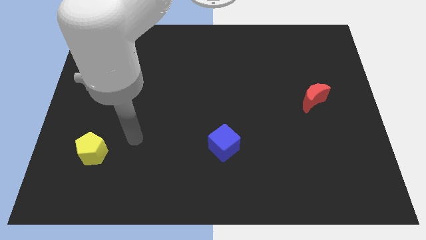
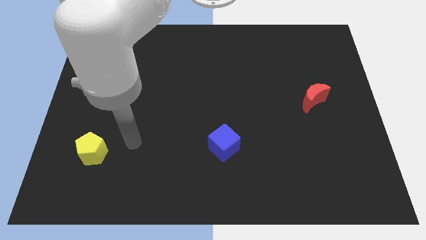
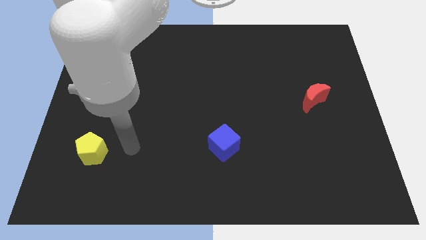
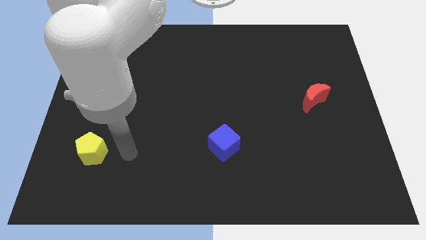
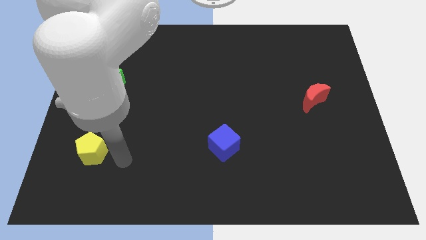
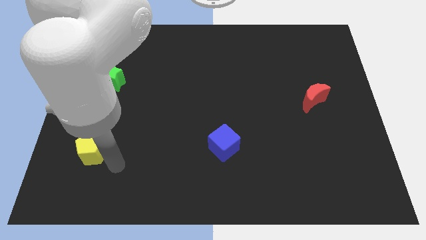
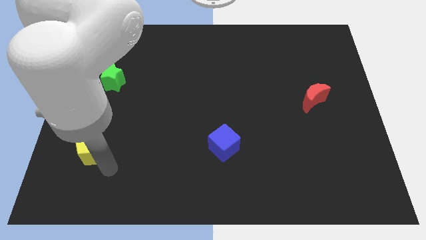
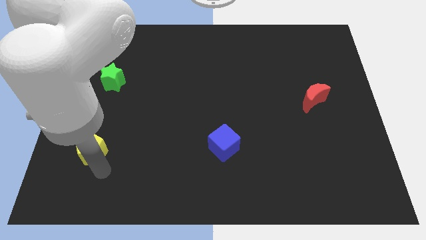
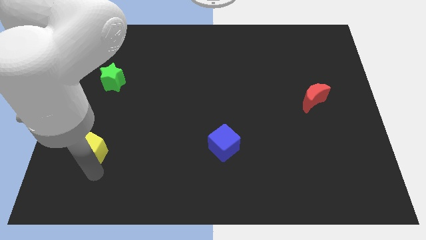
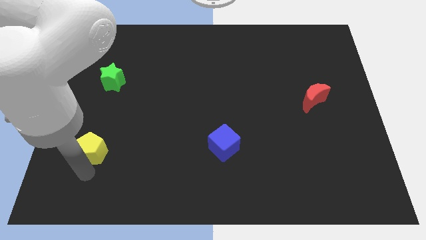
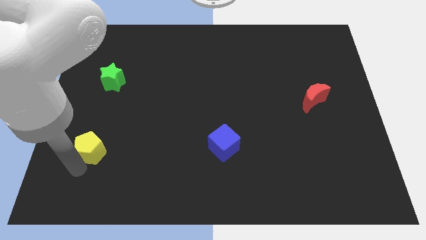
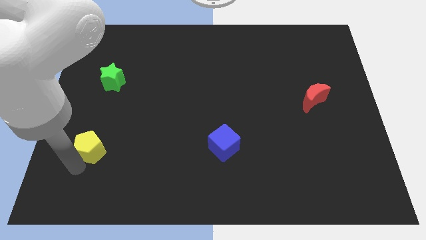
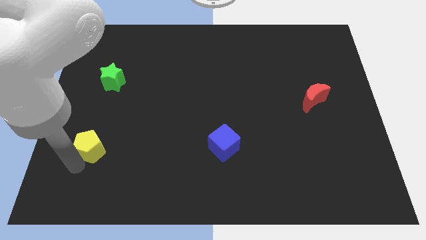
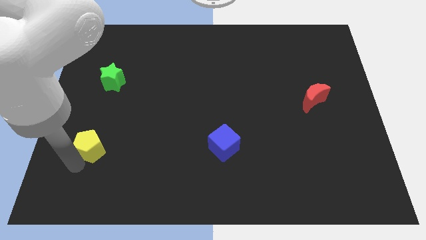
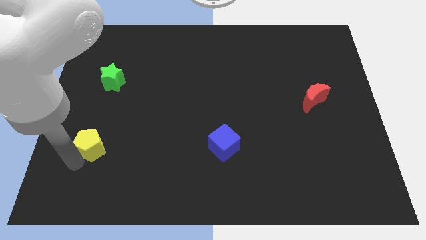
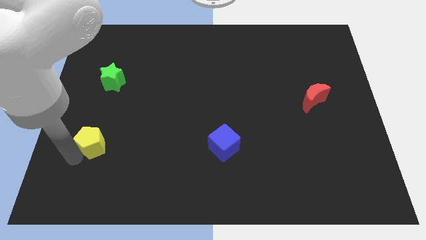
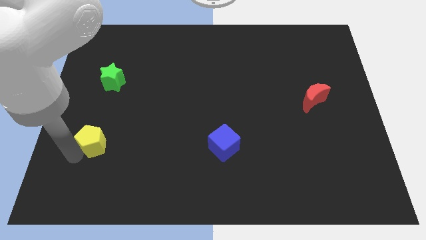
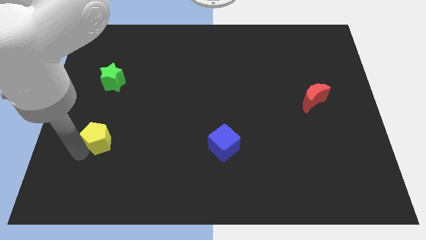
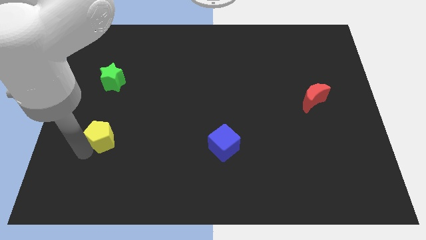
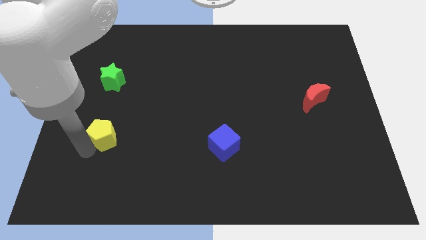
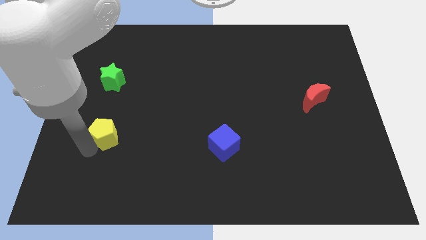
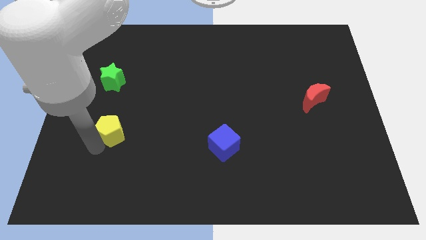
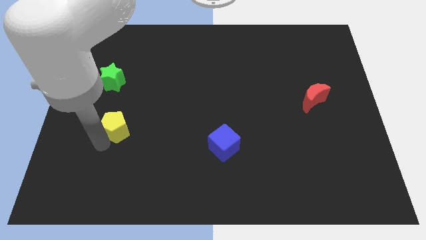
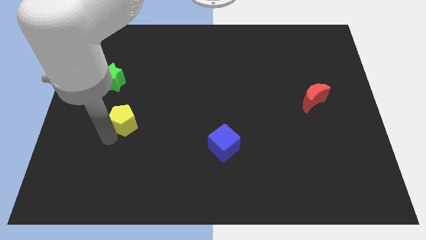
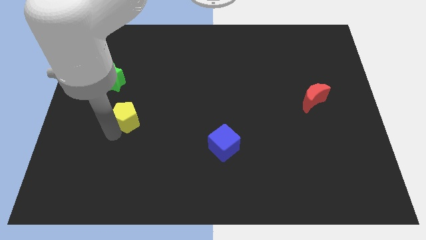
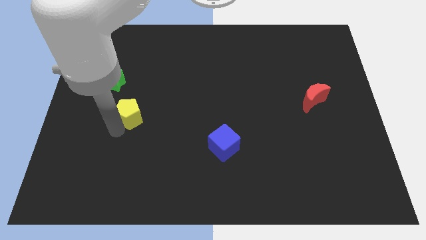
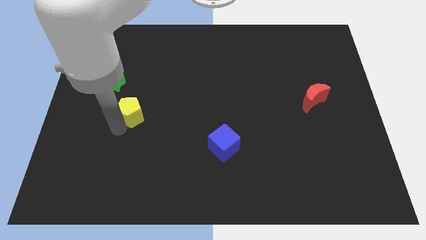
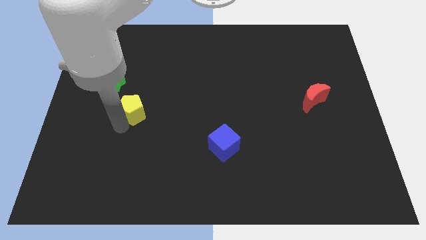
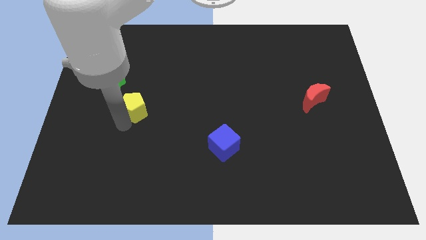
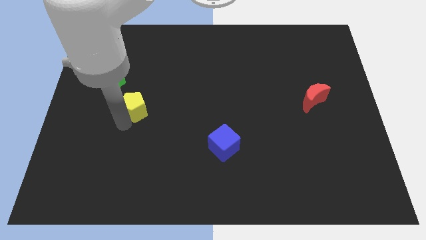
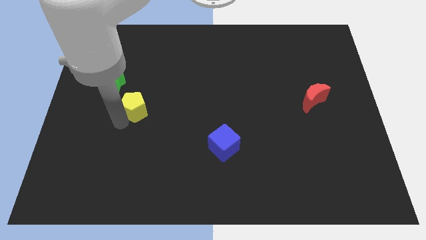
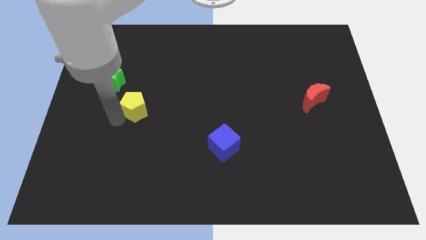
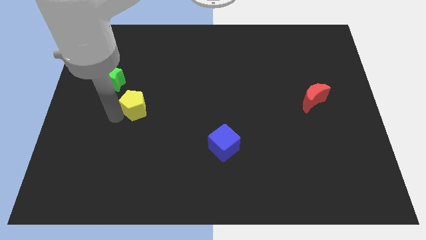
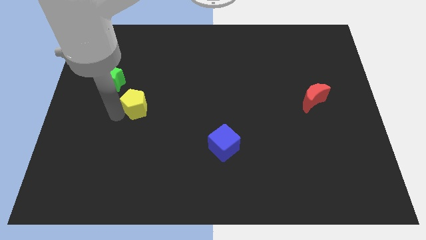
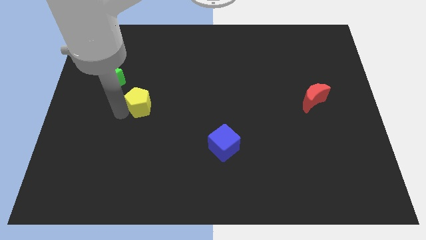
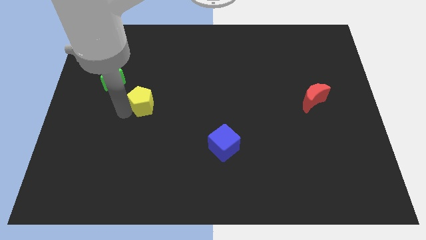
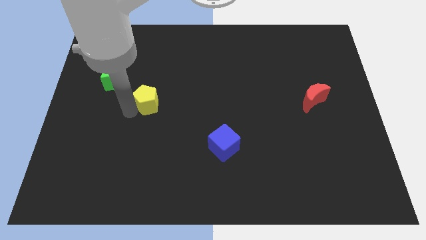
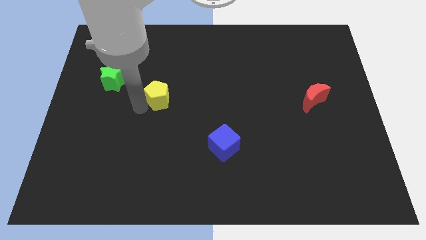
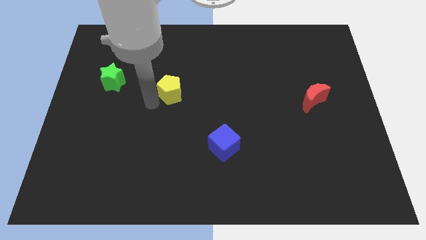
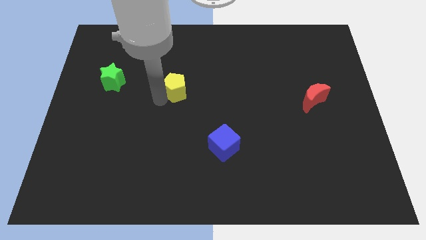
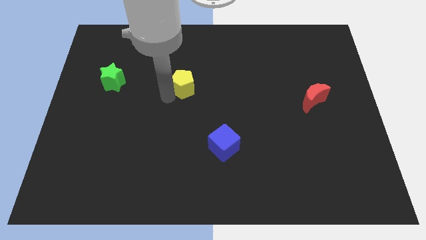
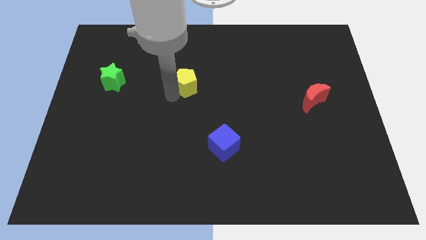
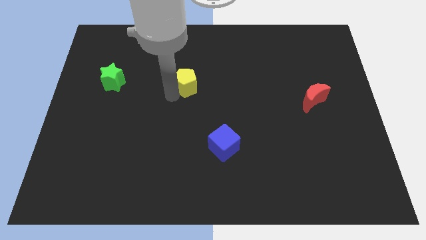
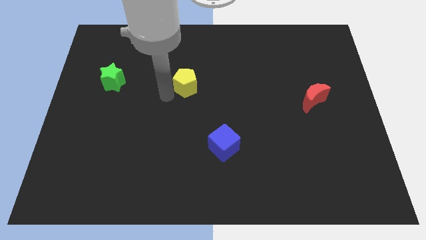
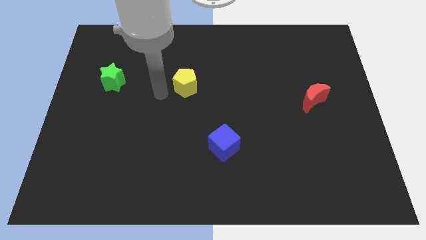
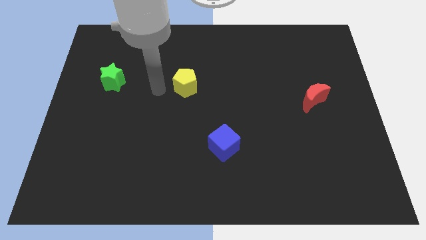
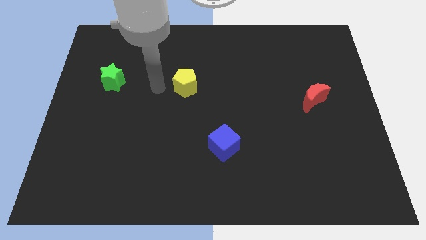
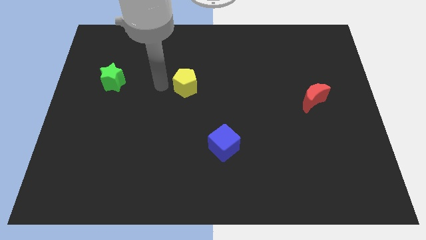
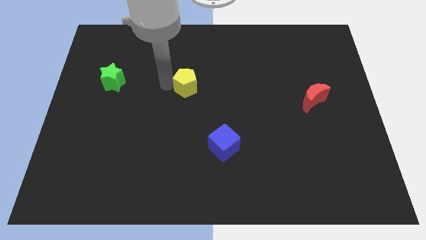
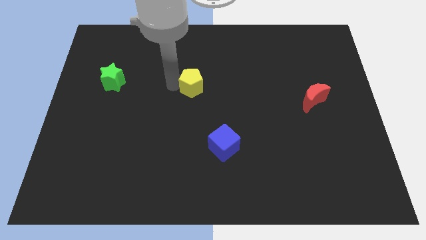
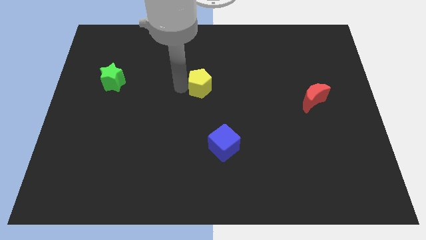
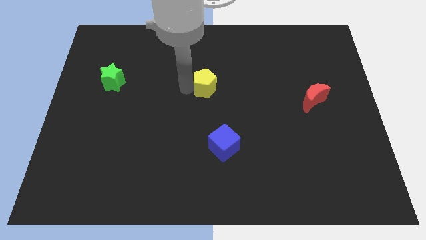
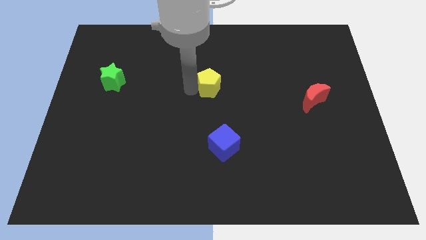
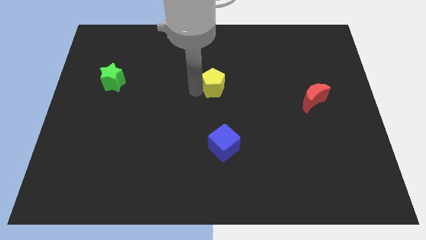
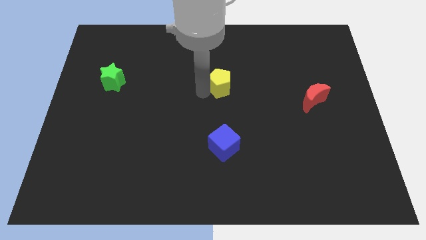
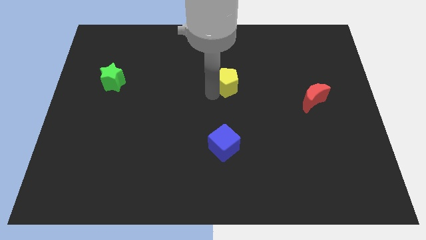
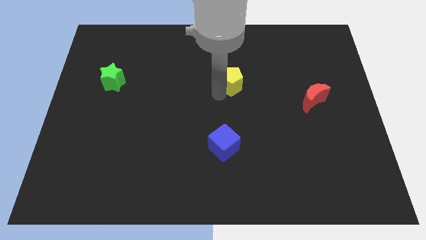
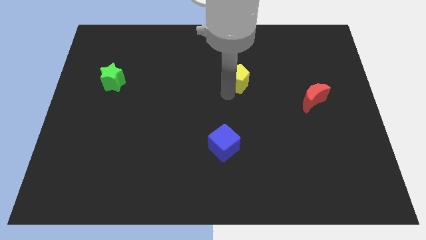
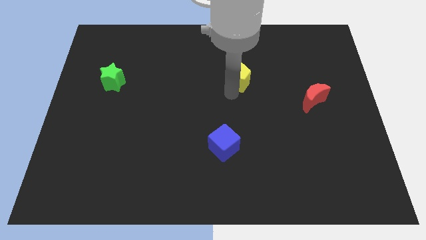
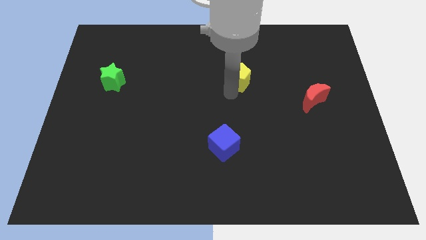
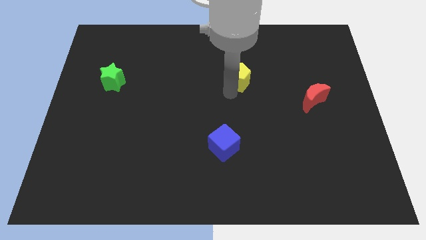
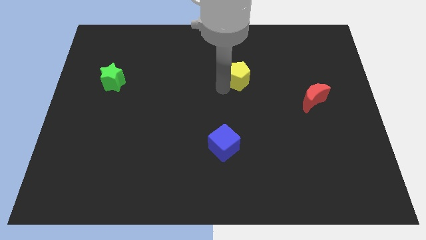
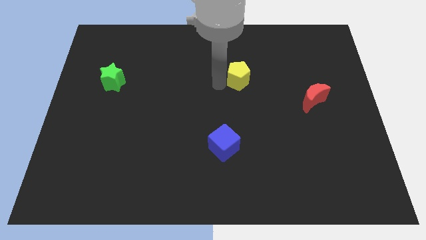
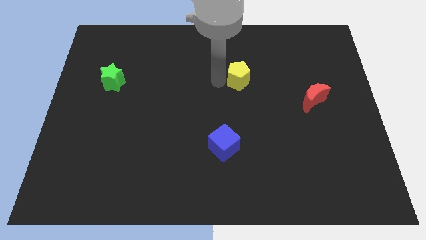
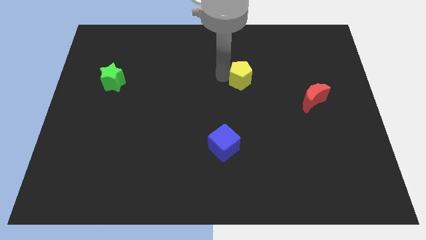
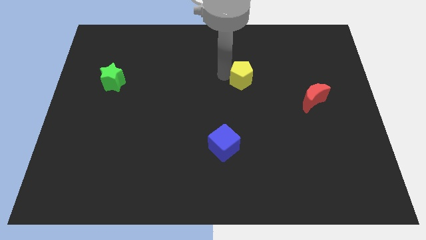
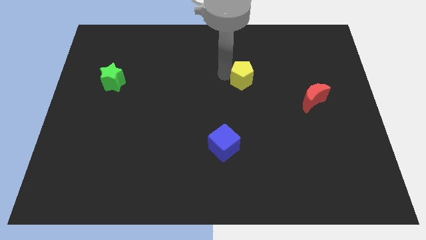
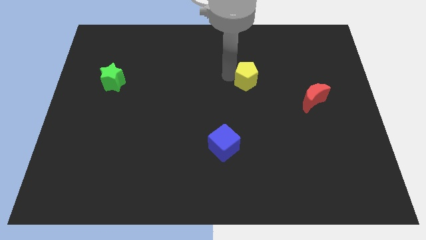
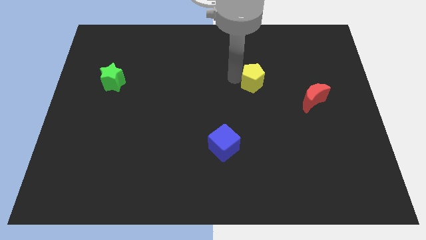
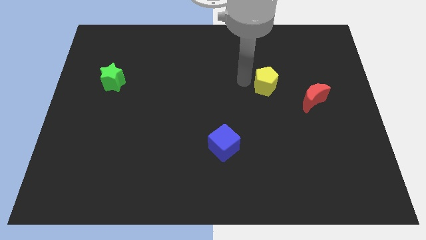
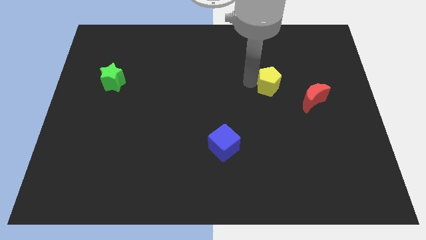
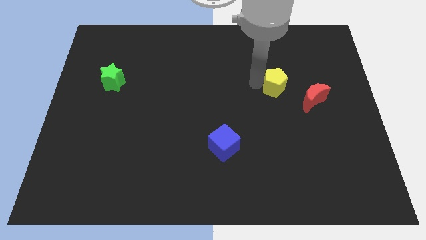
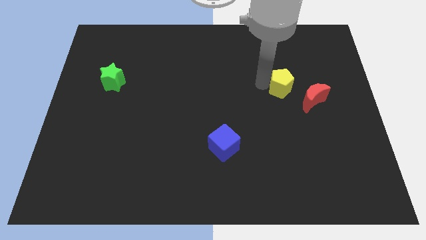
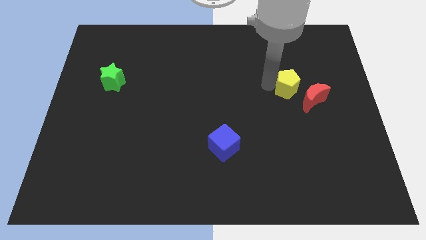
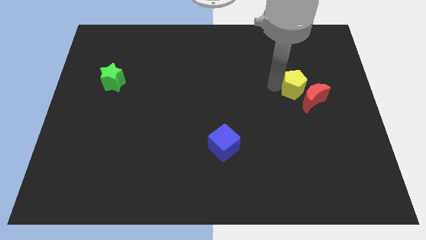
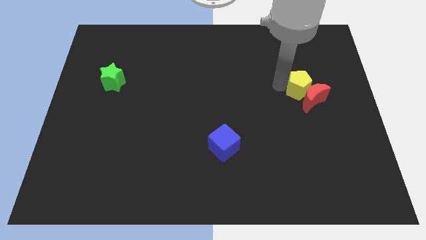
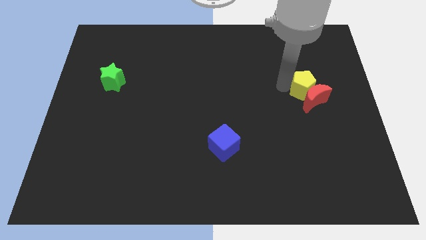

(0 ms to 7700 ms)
push the pentagon next to the moon

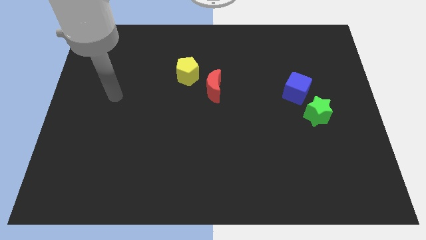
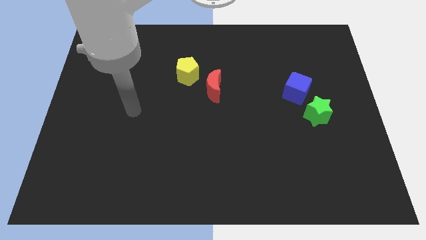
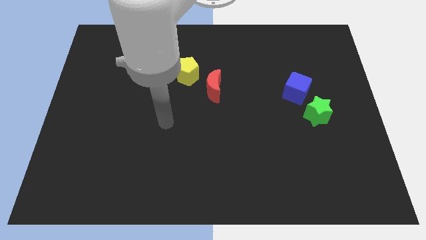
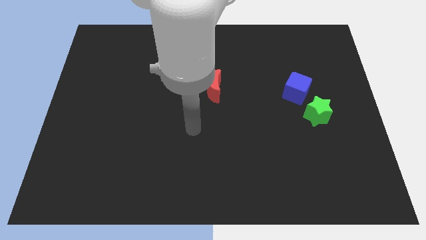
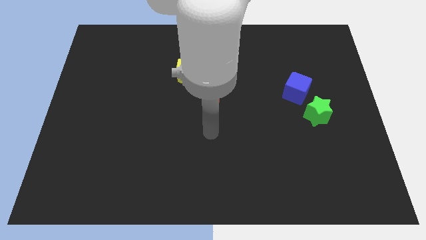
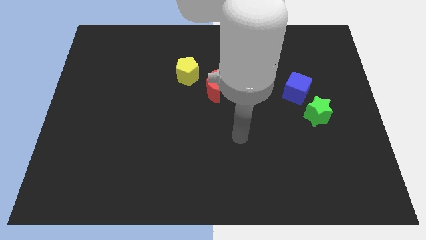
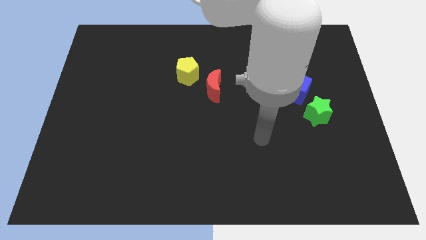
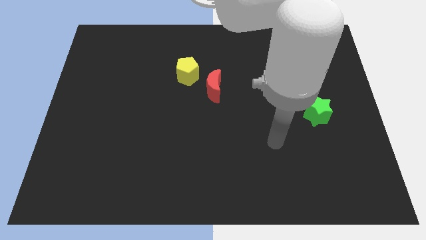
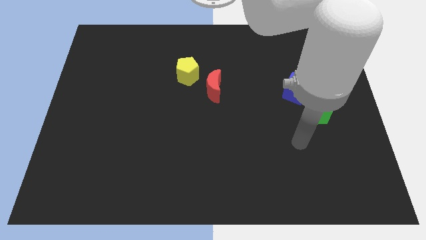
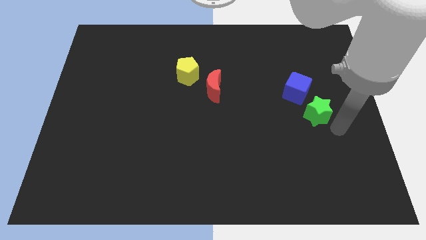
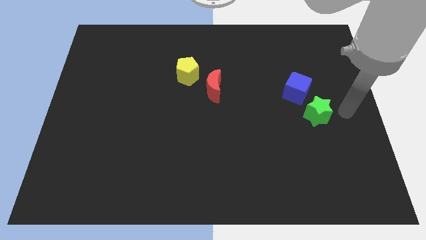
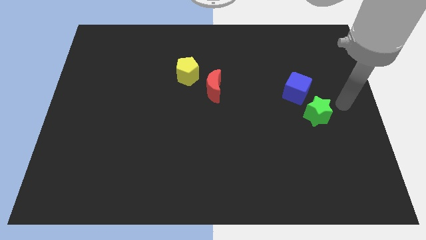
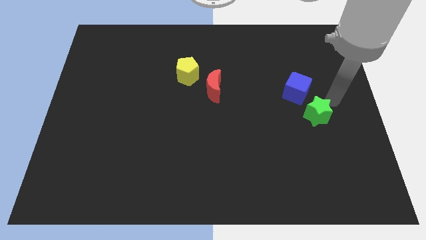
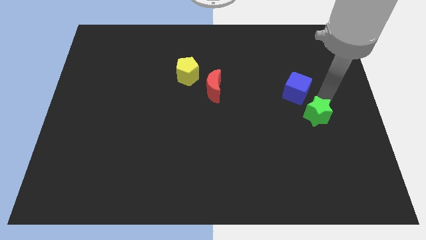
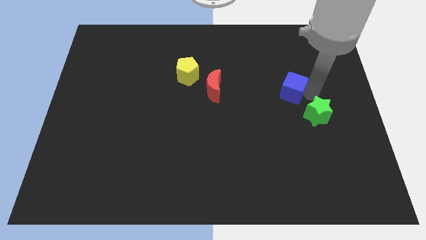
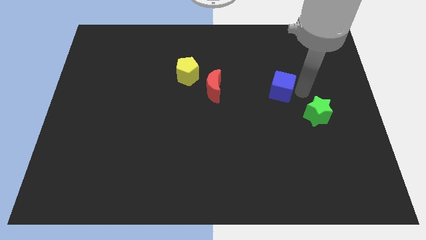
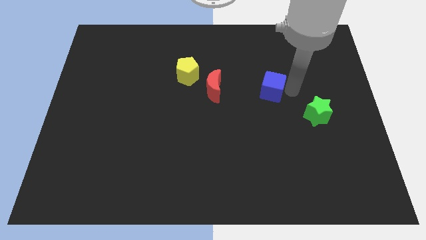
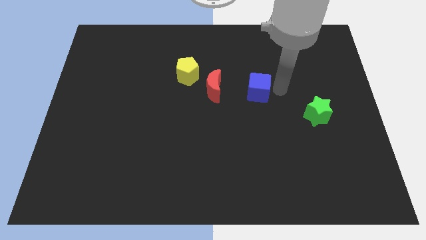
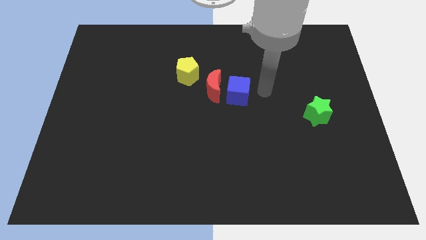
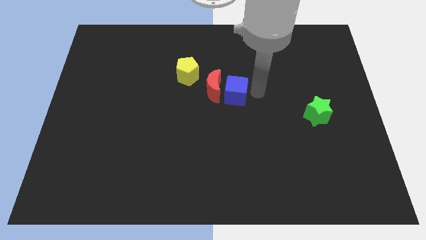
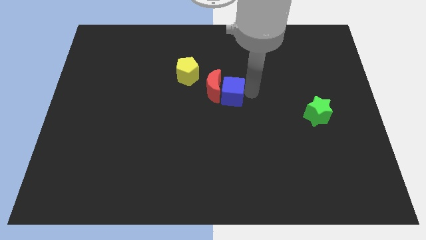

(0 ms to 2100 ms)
put the blue block close to the red block
